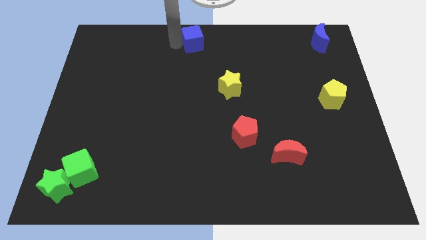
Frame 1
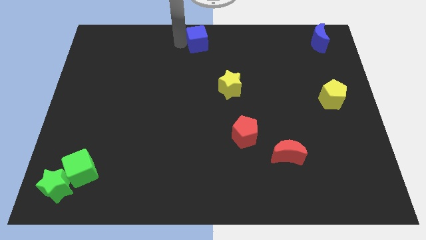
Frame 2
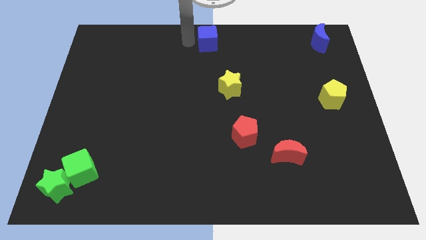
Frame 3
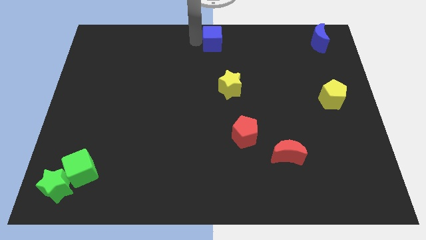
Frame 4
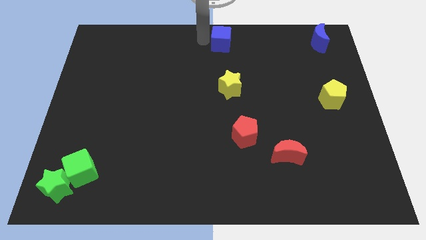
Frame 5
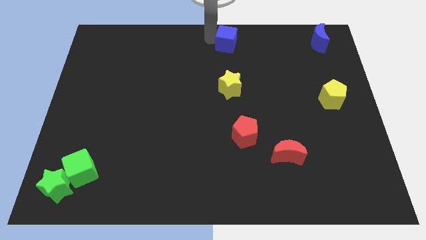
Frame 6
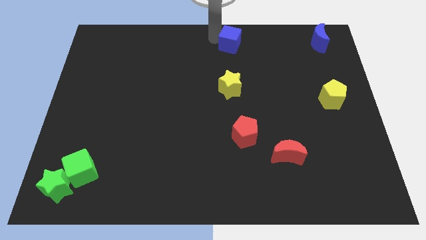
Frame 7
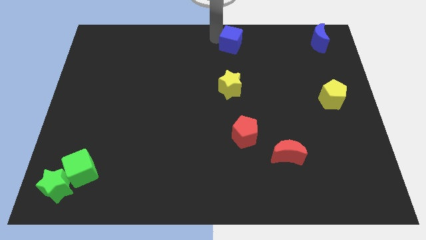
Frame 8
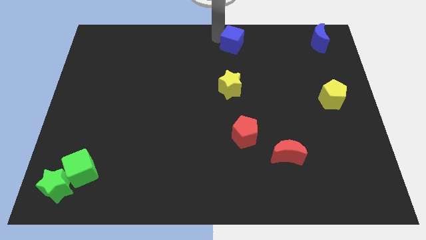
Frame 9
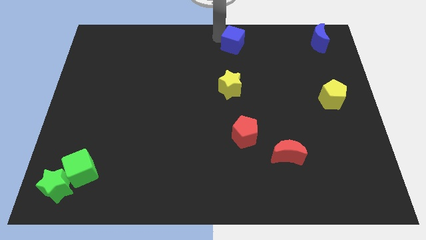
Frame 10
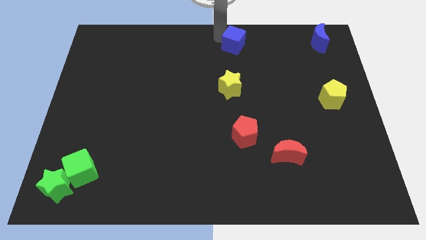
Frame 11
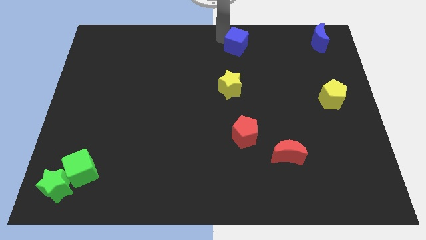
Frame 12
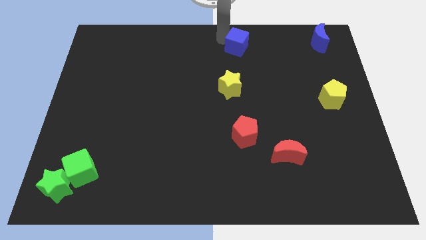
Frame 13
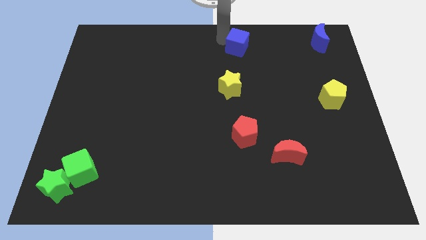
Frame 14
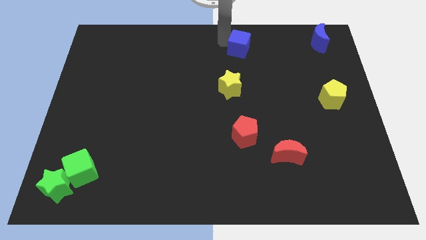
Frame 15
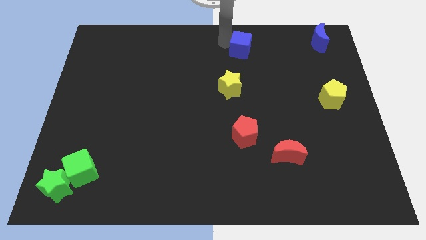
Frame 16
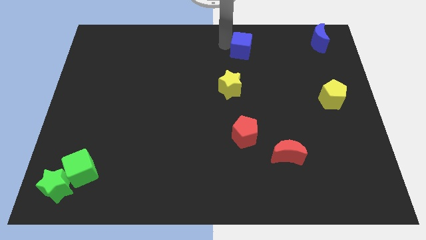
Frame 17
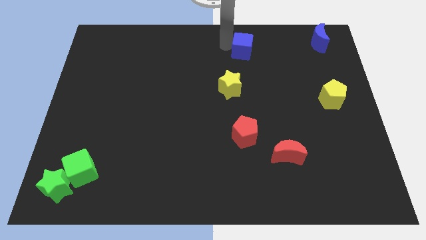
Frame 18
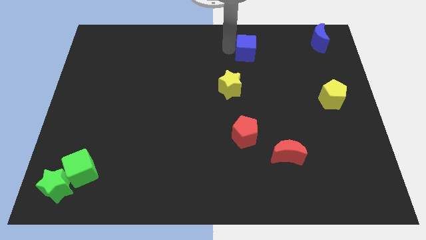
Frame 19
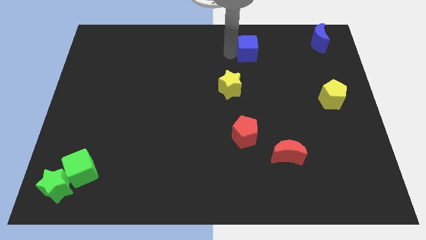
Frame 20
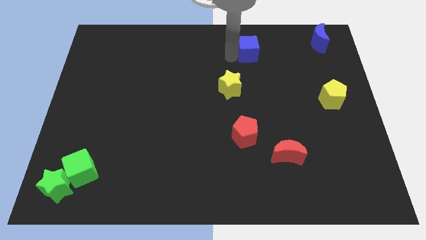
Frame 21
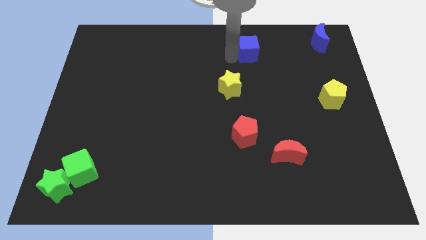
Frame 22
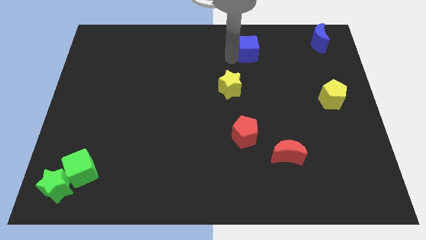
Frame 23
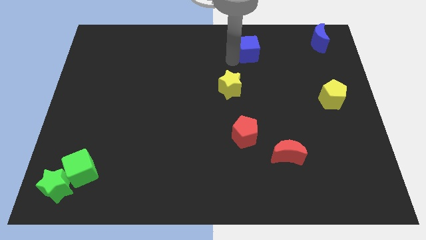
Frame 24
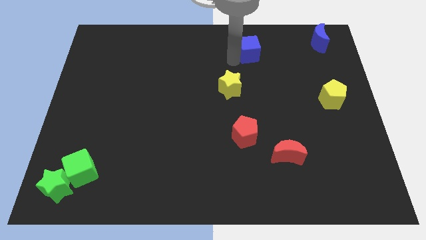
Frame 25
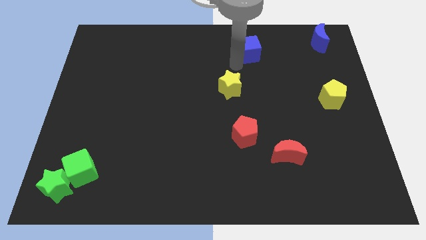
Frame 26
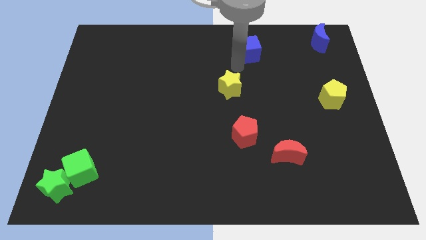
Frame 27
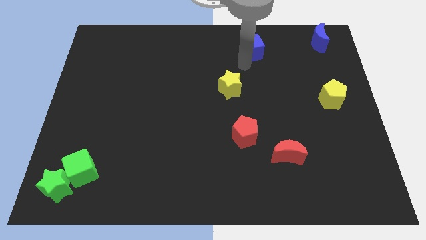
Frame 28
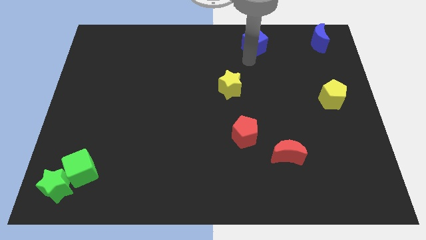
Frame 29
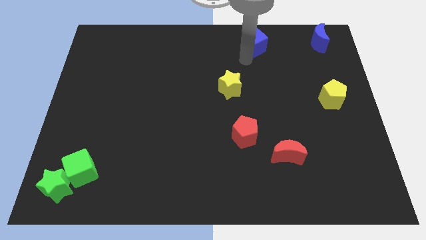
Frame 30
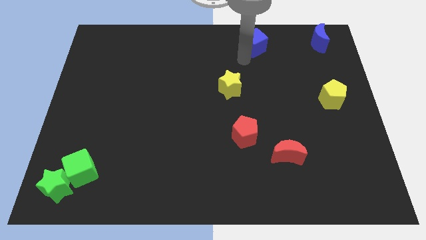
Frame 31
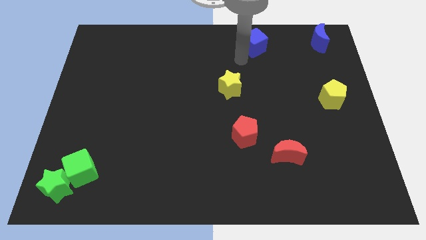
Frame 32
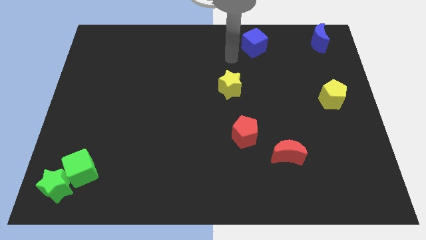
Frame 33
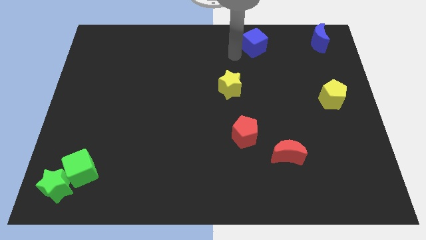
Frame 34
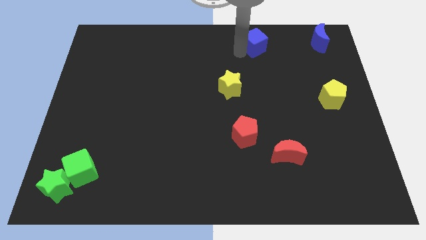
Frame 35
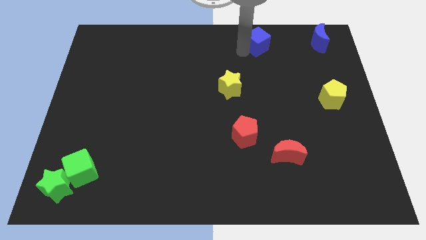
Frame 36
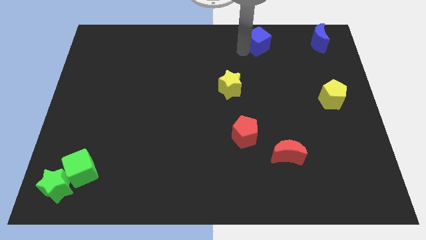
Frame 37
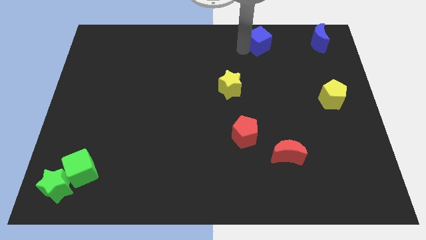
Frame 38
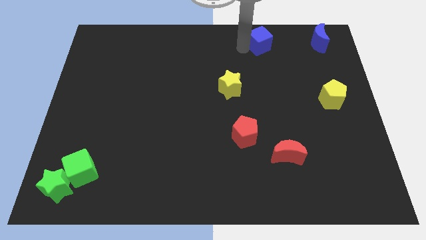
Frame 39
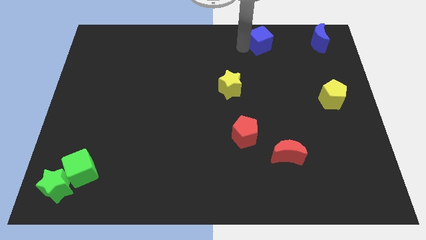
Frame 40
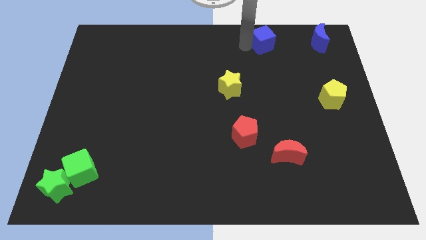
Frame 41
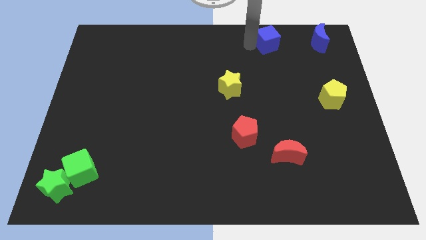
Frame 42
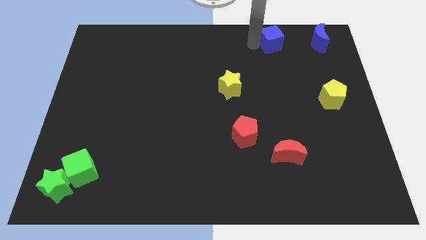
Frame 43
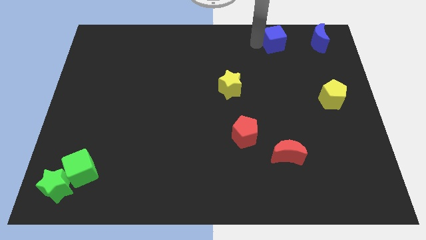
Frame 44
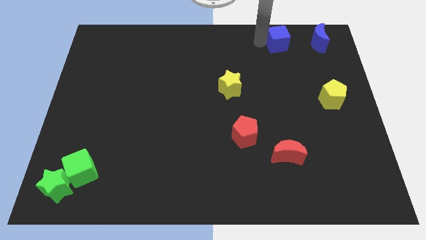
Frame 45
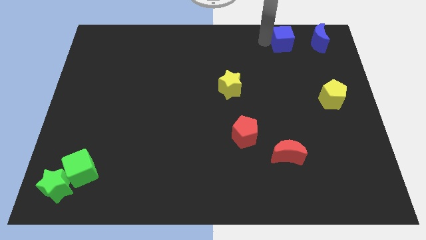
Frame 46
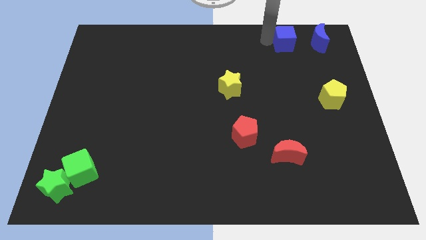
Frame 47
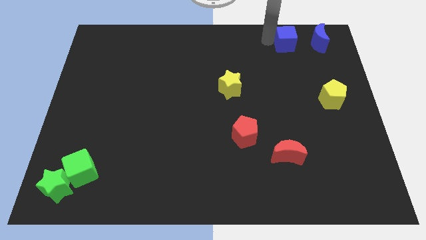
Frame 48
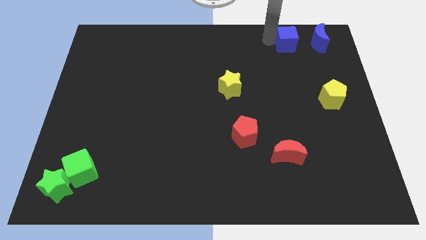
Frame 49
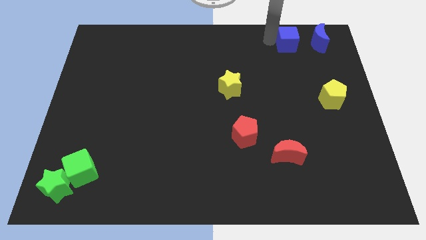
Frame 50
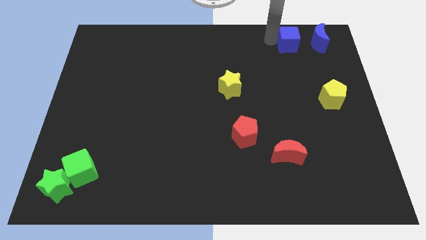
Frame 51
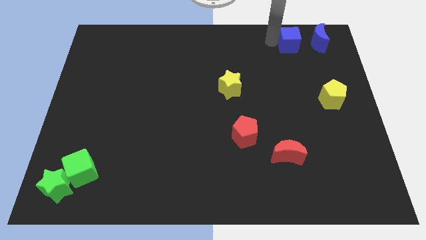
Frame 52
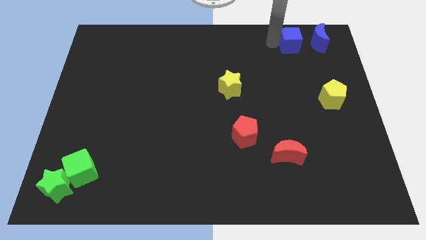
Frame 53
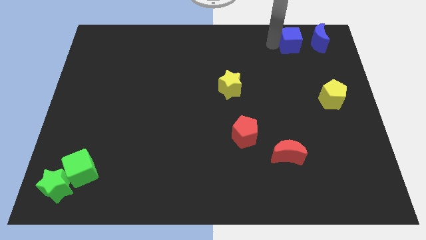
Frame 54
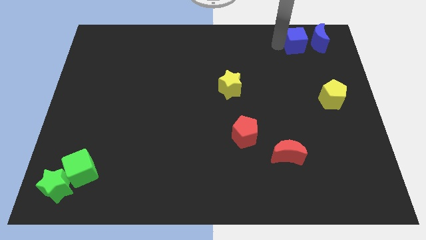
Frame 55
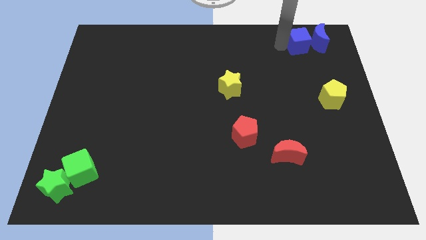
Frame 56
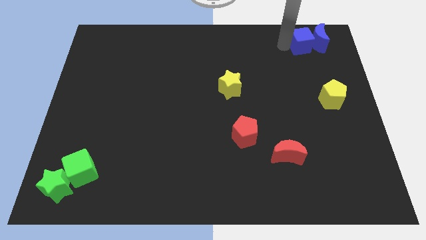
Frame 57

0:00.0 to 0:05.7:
push the blue cube to the left of the blue crescent

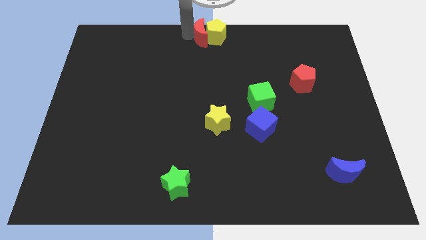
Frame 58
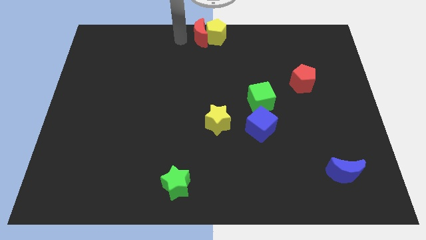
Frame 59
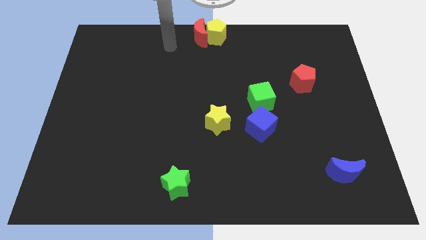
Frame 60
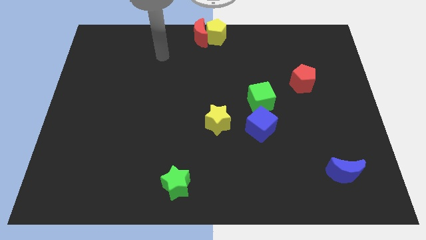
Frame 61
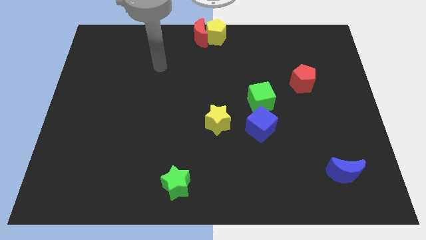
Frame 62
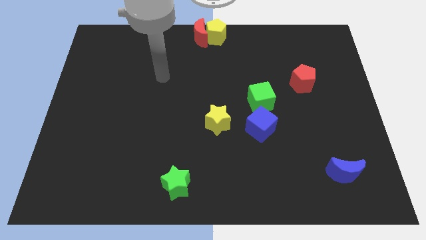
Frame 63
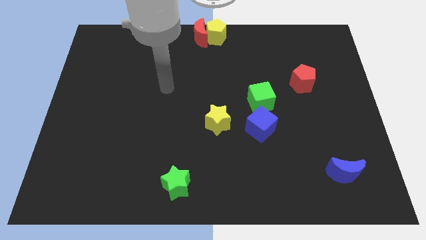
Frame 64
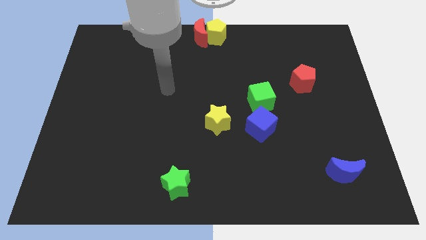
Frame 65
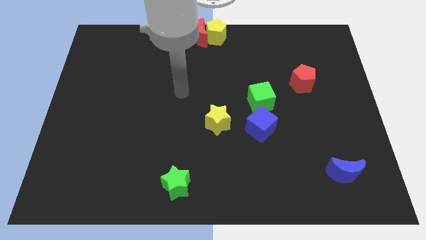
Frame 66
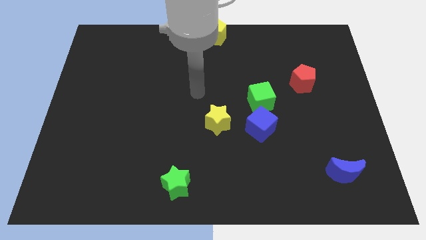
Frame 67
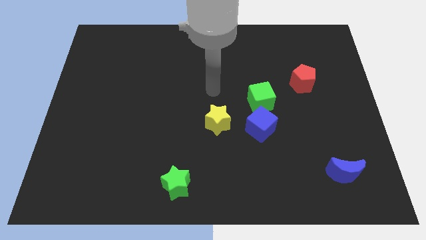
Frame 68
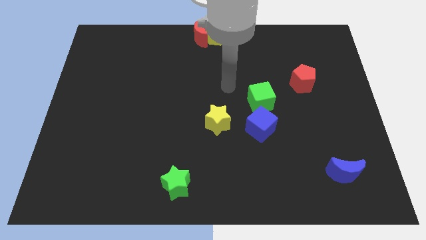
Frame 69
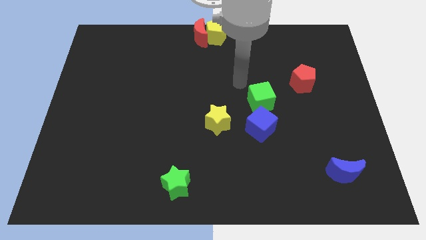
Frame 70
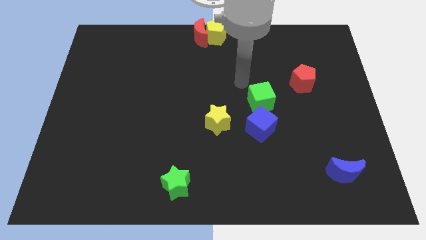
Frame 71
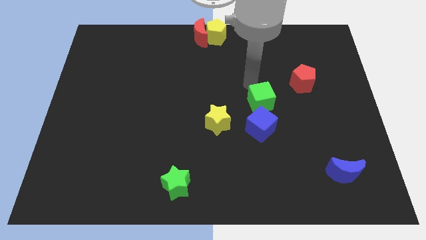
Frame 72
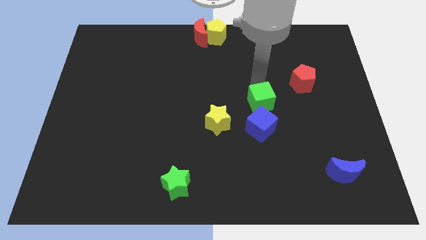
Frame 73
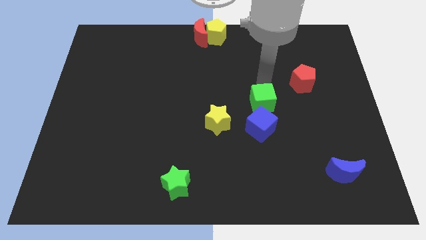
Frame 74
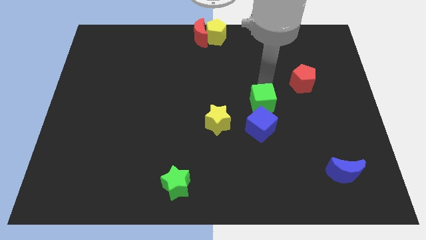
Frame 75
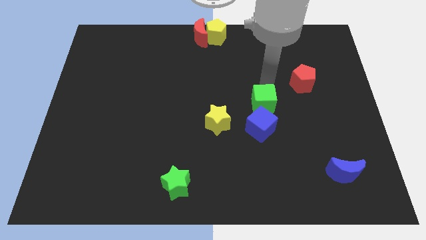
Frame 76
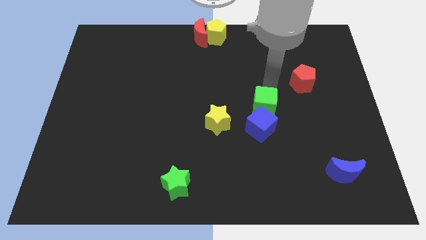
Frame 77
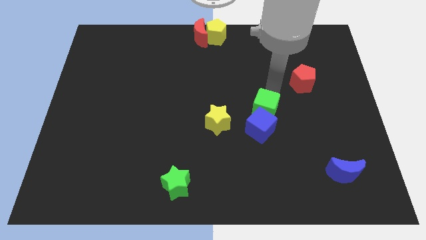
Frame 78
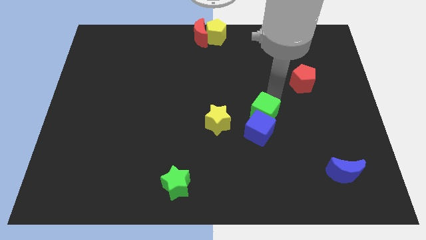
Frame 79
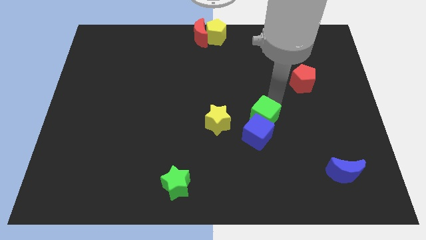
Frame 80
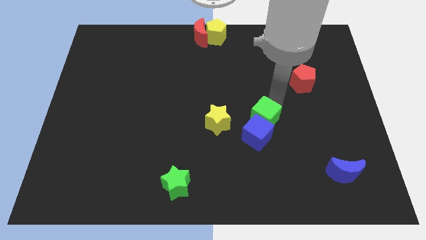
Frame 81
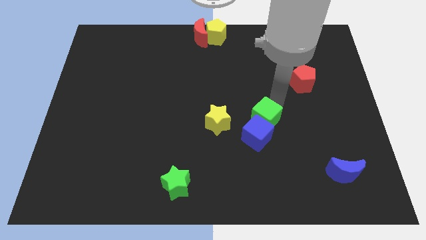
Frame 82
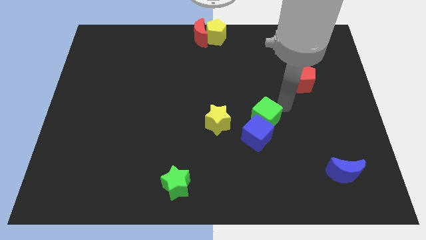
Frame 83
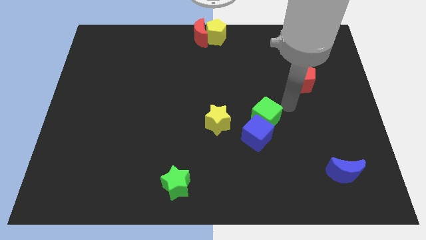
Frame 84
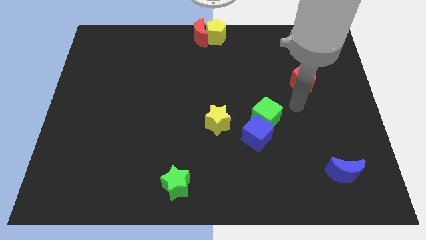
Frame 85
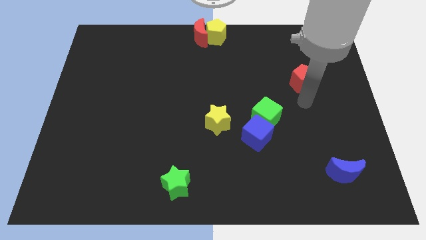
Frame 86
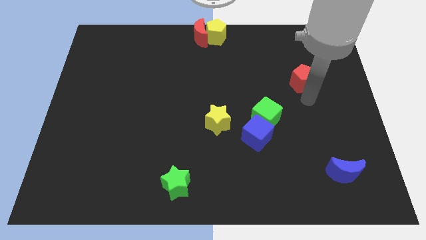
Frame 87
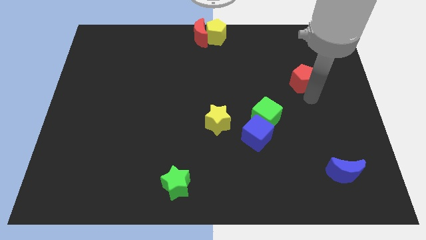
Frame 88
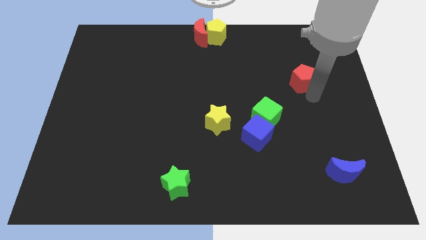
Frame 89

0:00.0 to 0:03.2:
slide the green cube into the blue cube

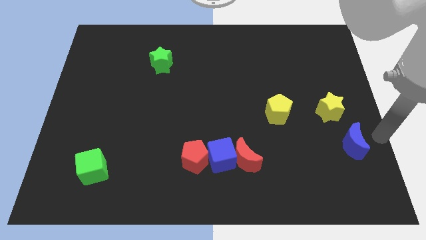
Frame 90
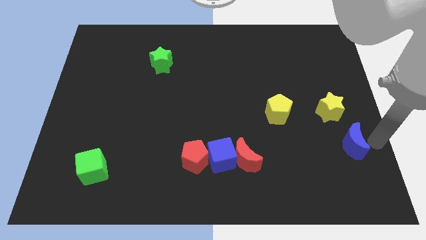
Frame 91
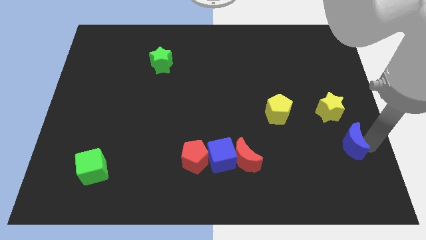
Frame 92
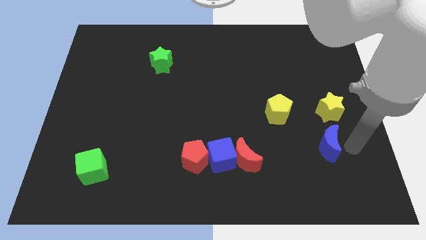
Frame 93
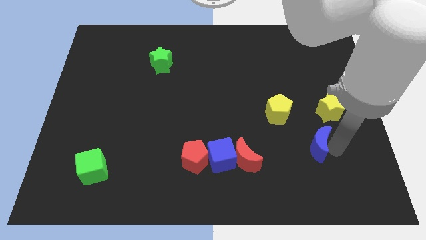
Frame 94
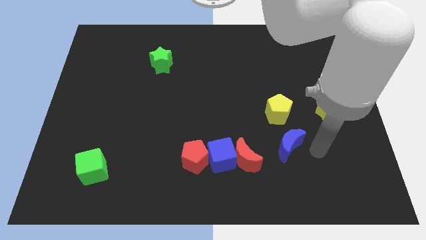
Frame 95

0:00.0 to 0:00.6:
move blue moon to the left
